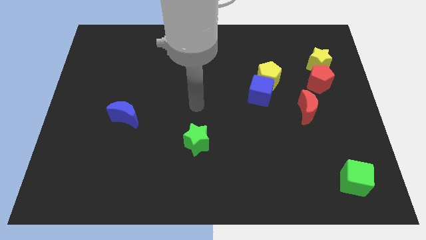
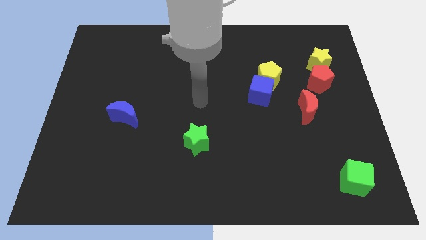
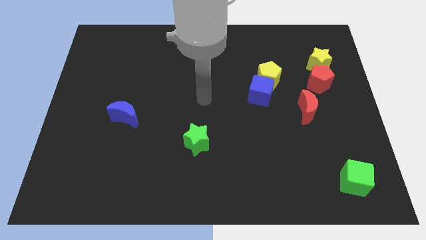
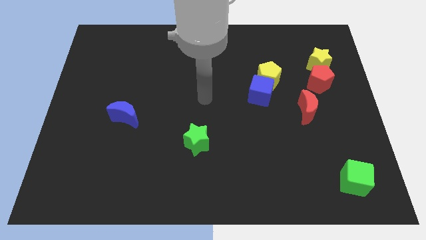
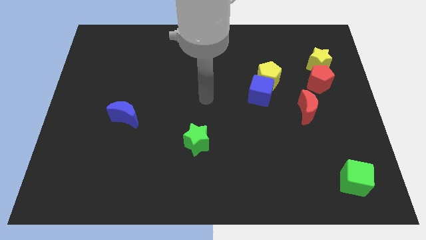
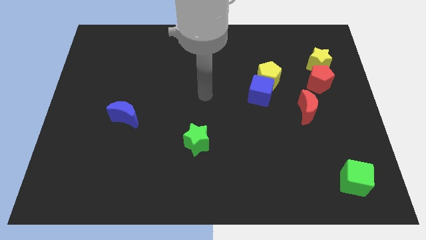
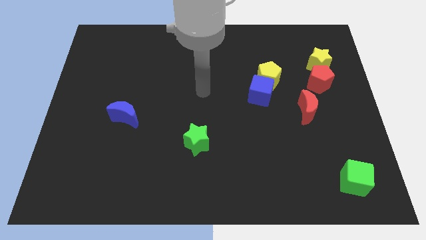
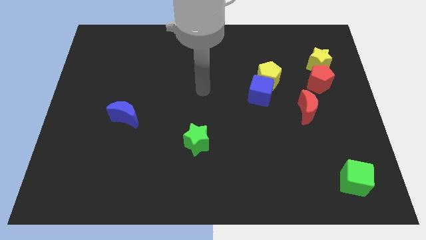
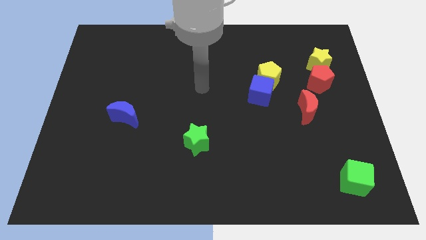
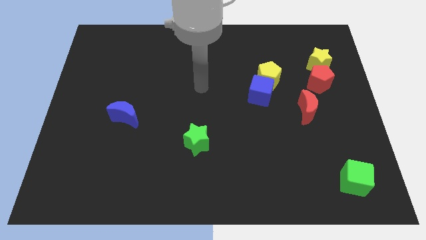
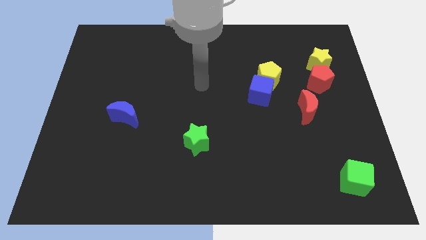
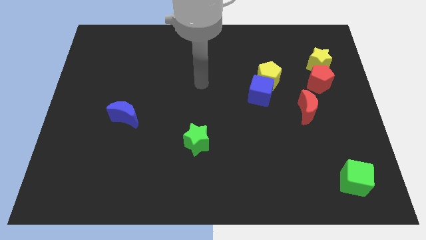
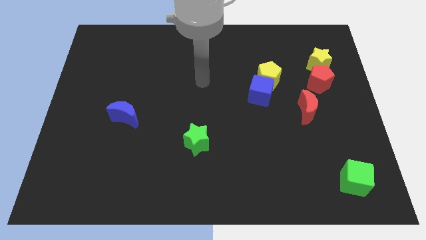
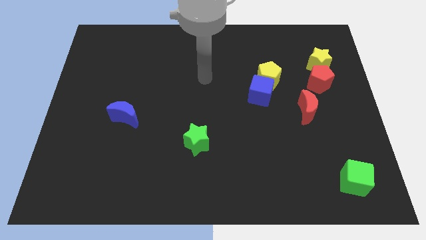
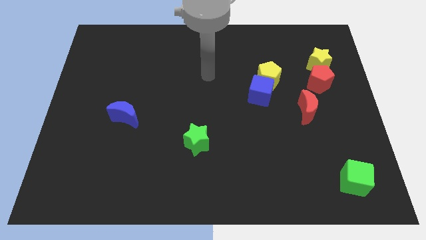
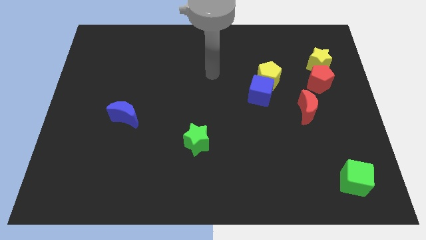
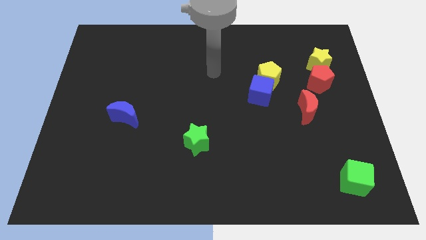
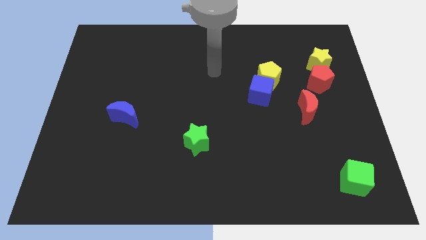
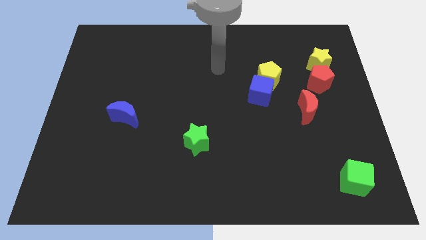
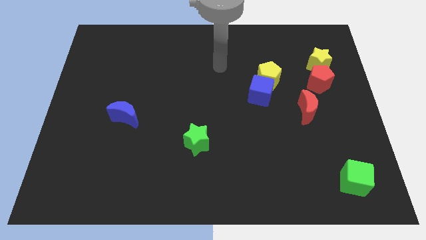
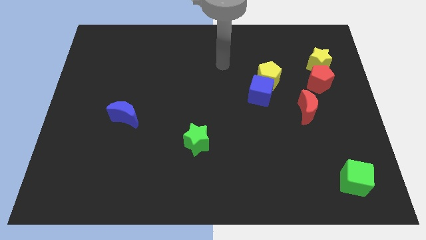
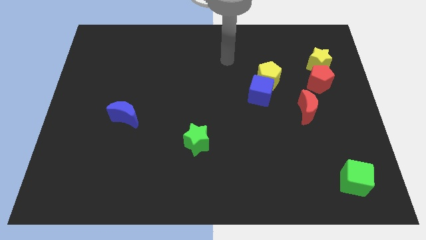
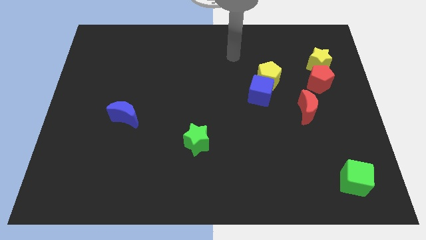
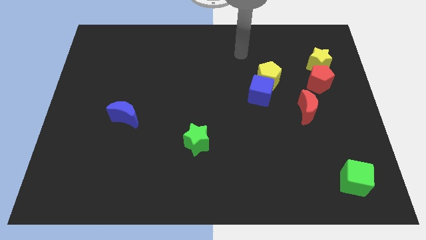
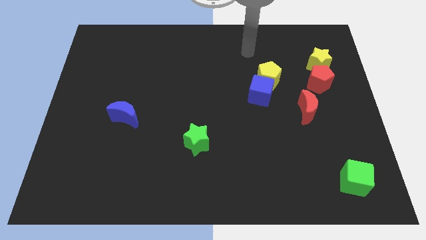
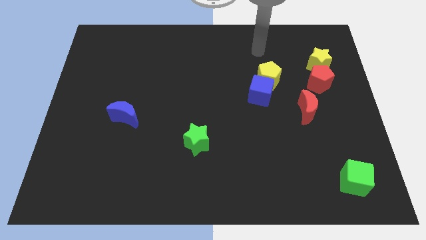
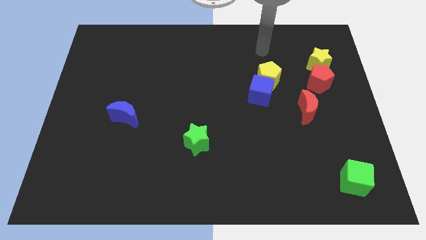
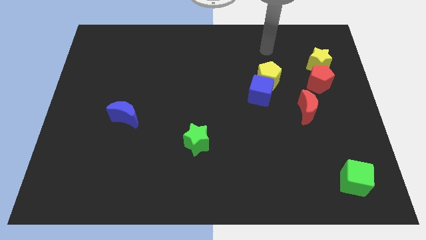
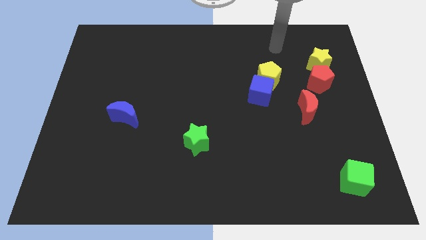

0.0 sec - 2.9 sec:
point your arm at the top of the yellow pentagon

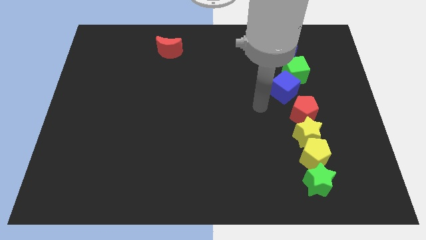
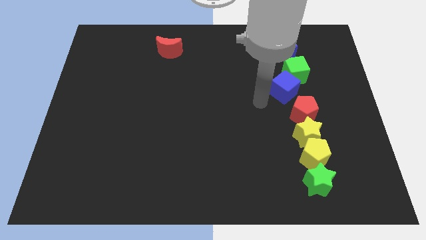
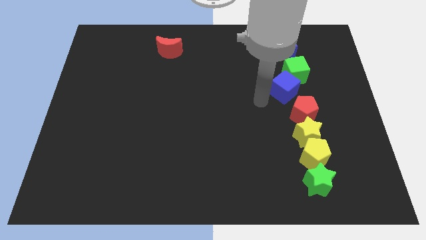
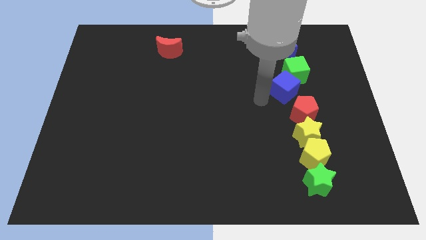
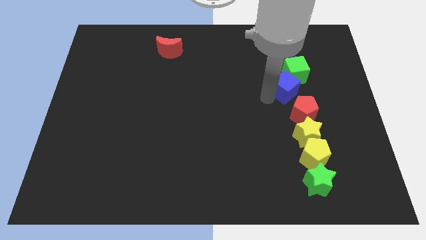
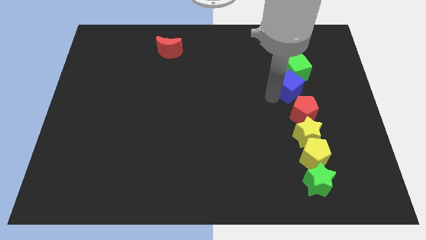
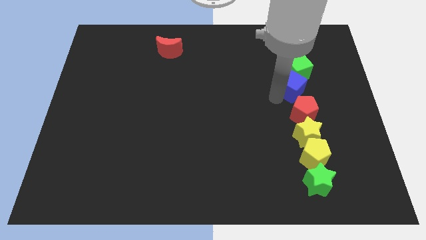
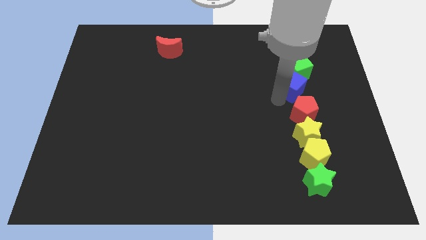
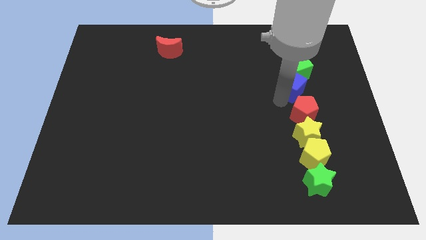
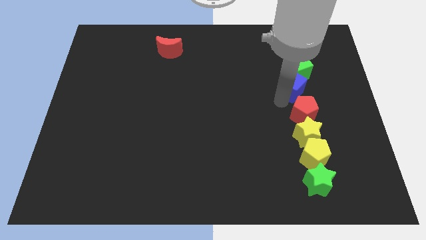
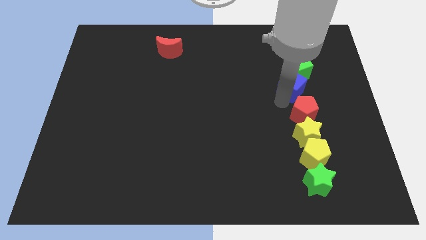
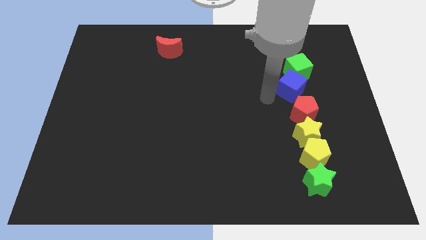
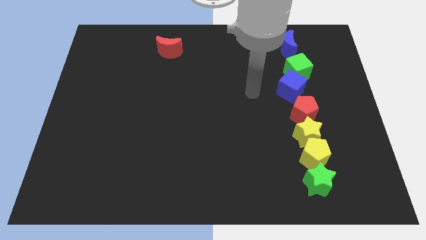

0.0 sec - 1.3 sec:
place the blue cube at the bottom of the green cube

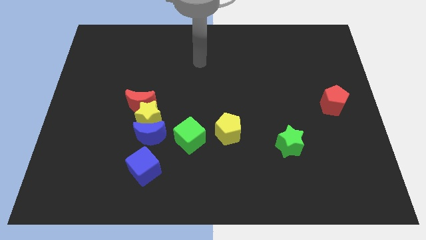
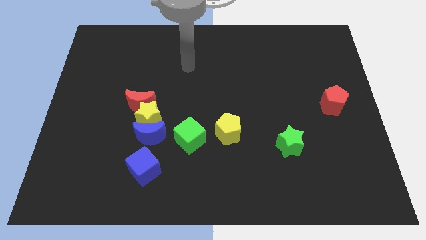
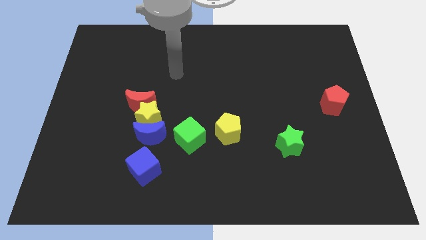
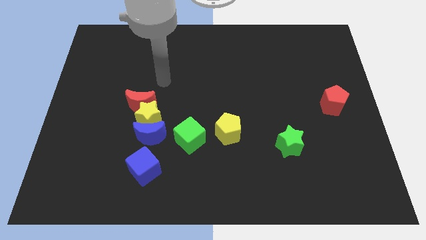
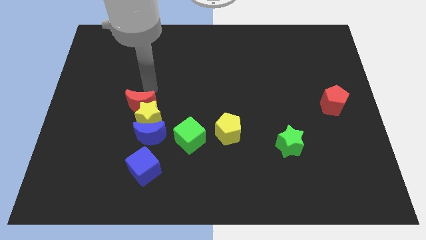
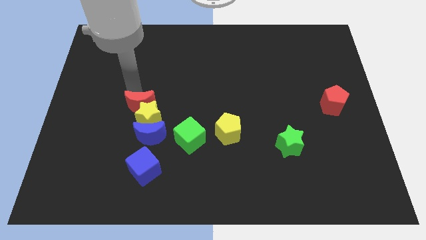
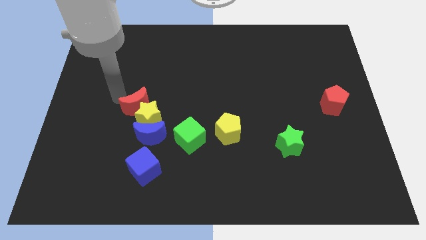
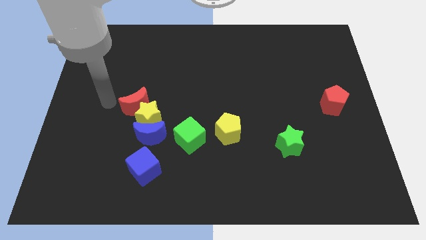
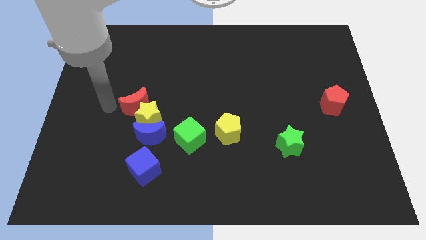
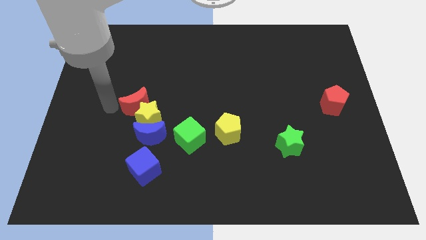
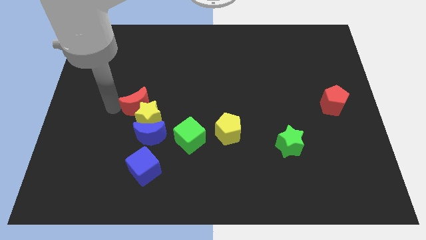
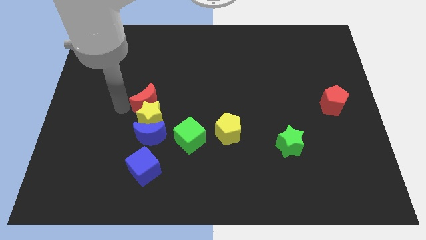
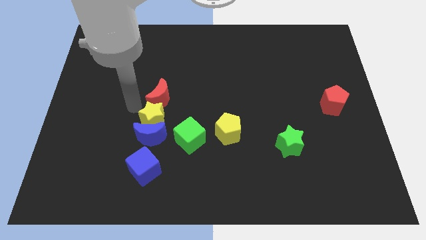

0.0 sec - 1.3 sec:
push the red crescent slightly to the right

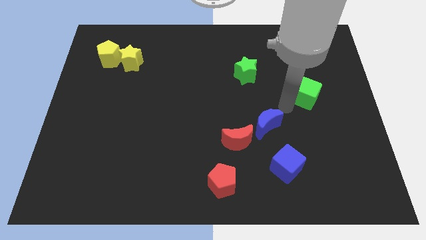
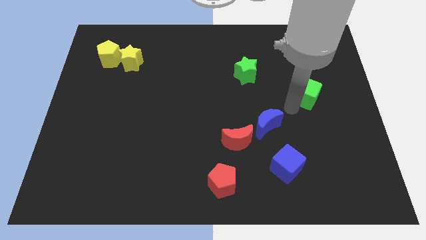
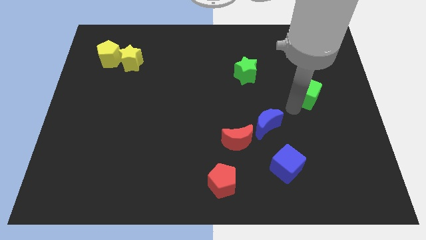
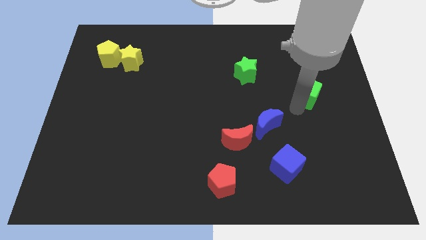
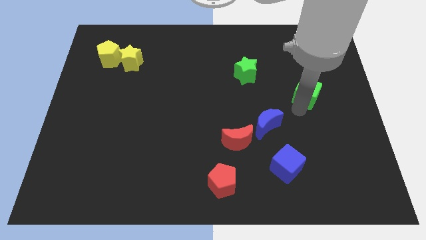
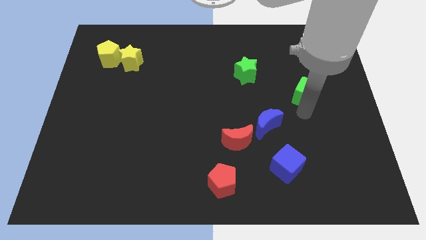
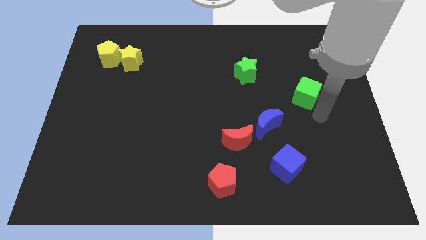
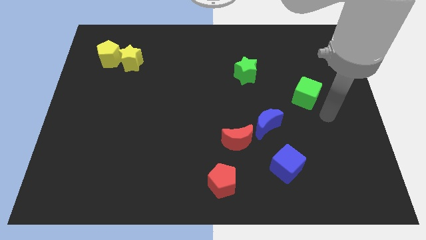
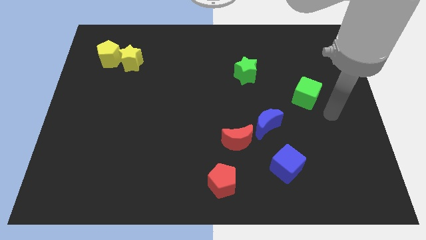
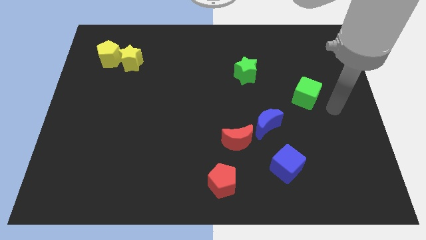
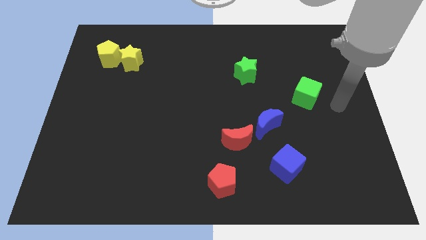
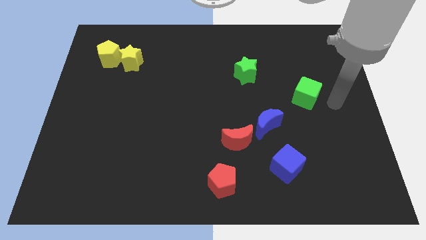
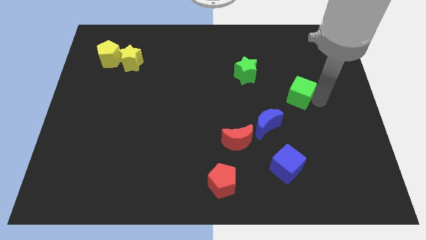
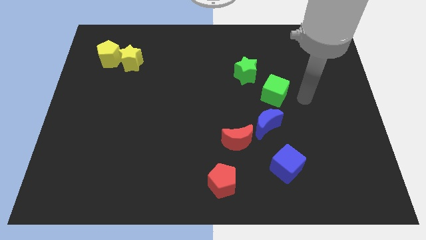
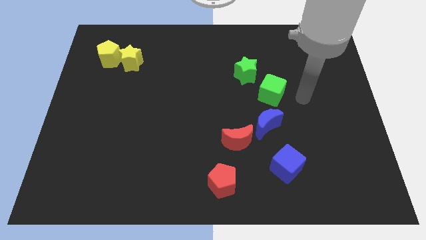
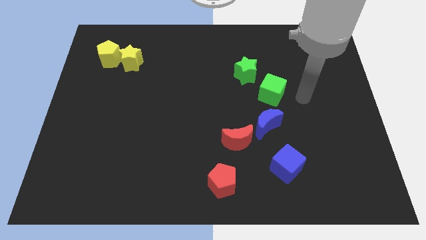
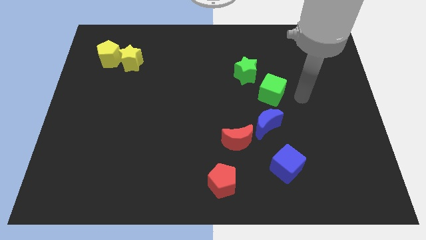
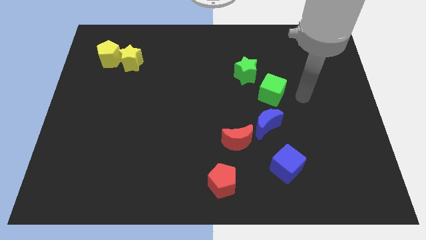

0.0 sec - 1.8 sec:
push the green cube above blue moon

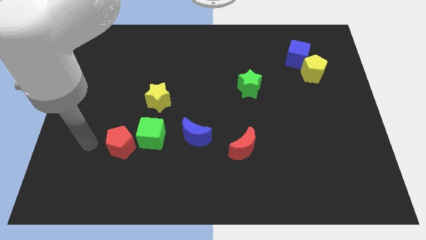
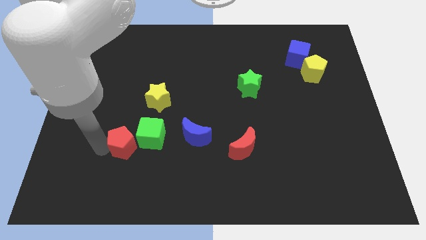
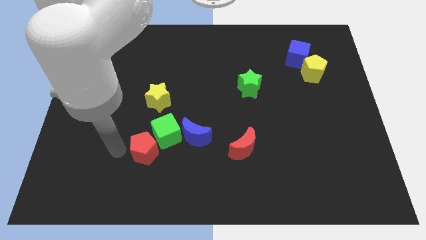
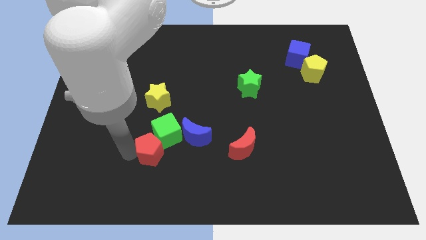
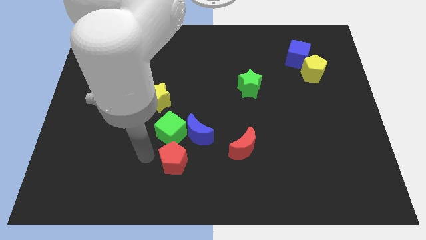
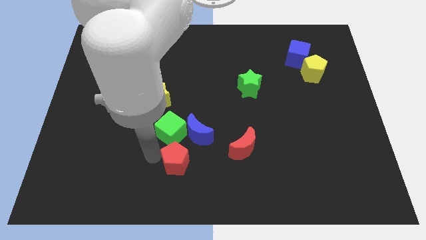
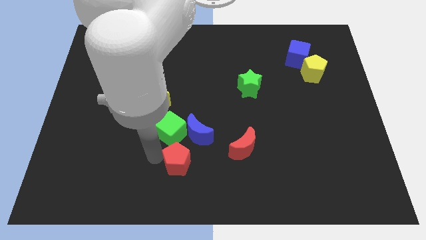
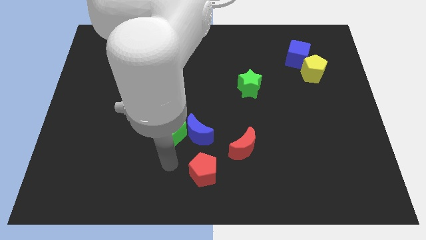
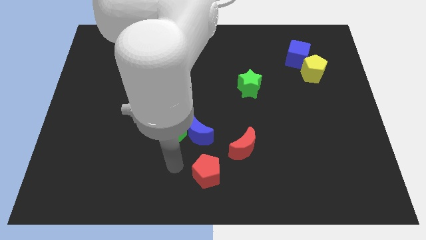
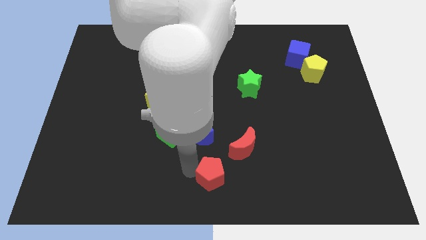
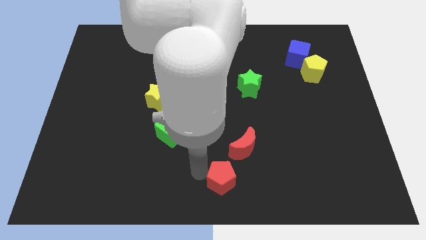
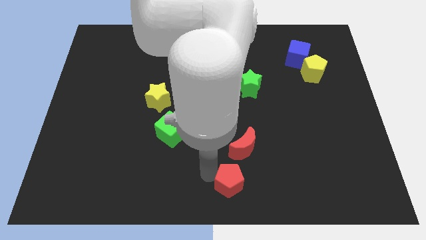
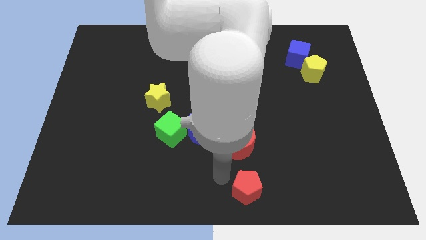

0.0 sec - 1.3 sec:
separate the red pentagon from the green cube

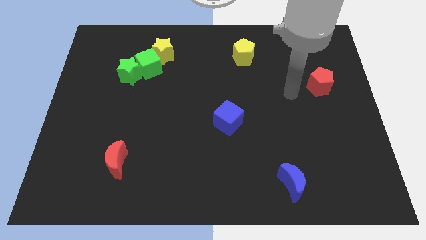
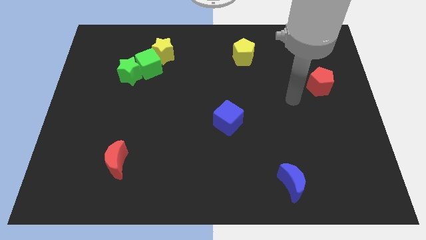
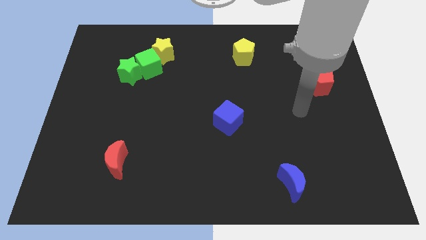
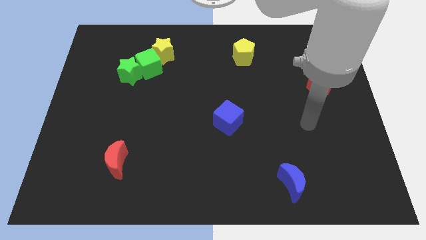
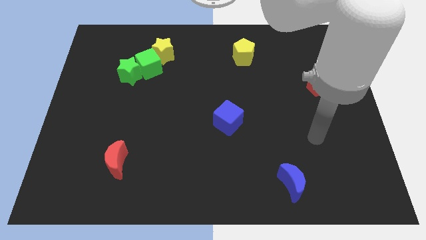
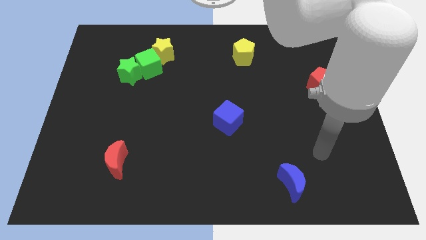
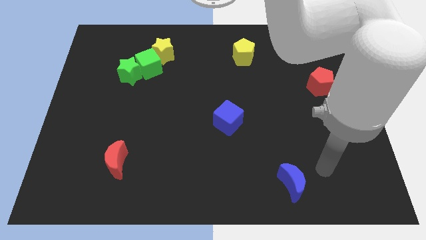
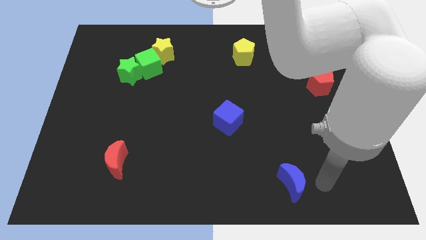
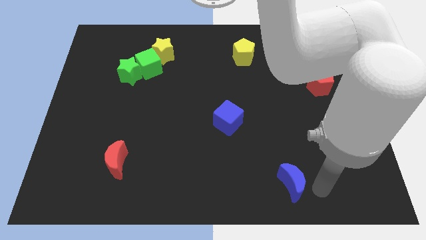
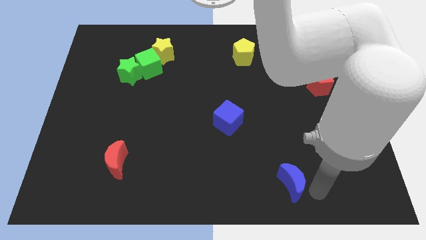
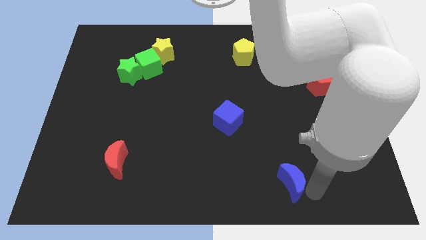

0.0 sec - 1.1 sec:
move your arm away from the red pentagon
